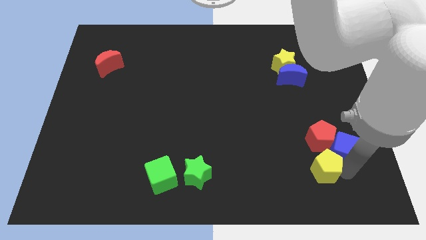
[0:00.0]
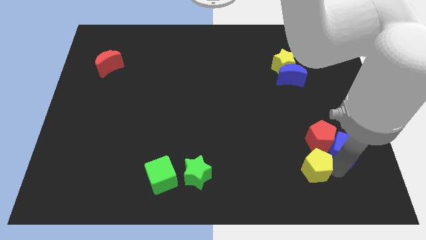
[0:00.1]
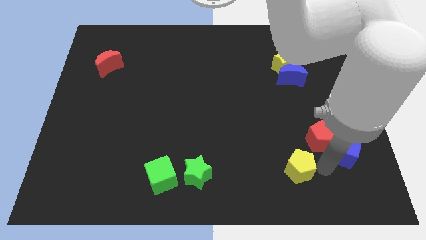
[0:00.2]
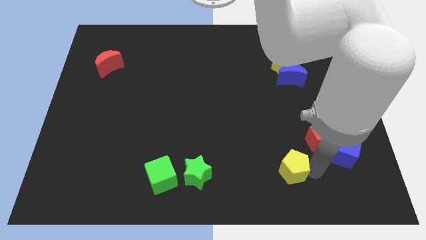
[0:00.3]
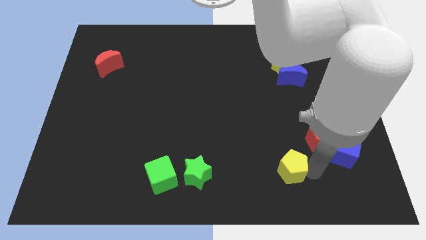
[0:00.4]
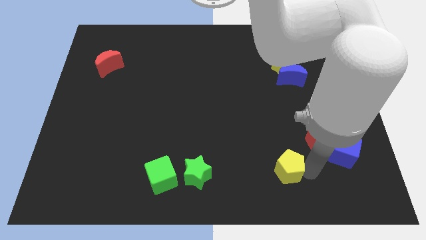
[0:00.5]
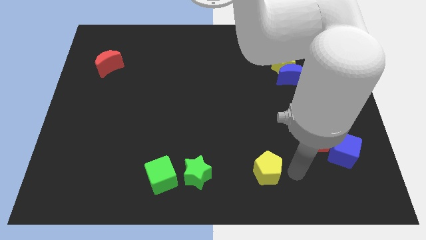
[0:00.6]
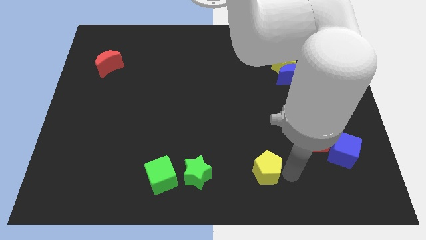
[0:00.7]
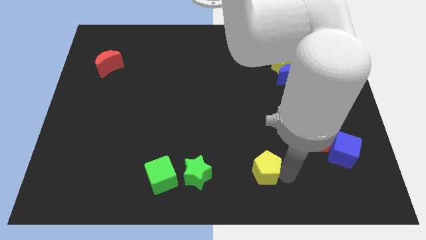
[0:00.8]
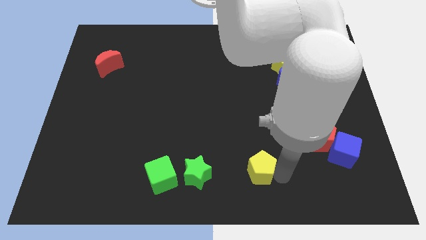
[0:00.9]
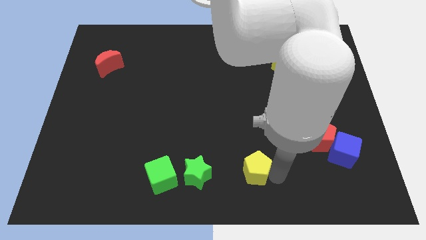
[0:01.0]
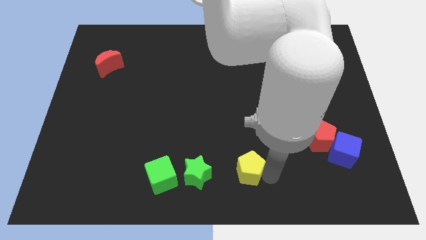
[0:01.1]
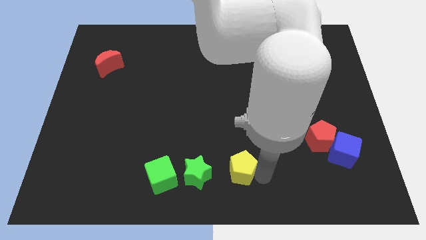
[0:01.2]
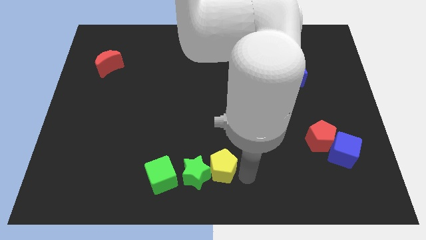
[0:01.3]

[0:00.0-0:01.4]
move the yellow pentagon into the green star

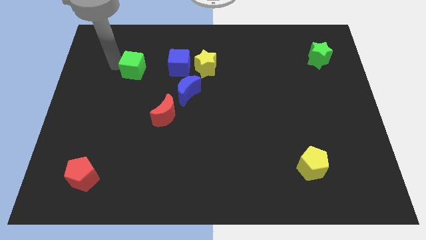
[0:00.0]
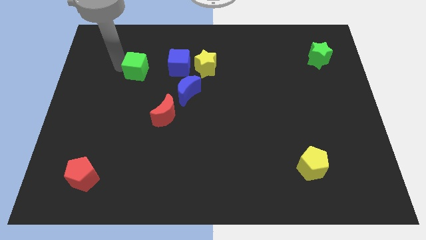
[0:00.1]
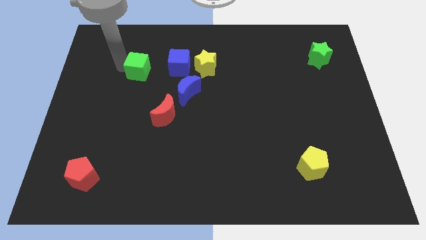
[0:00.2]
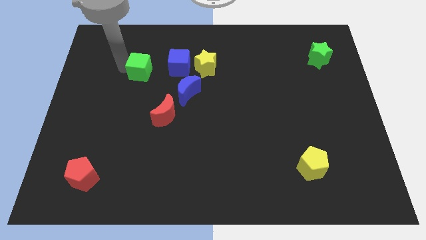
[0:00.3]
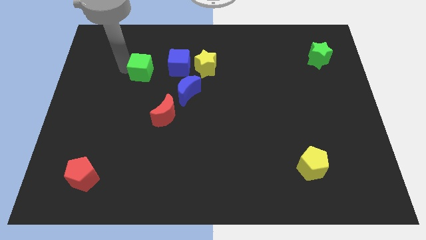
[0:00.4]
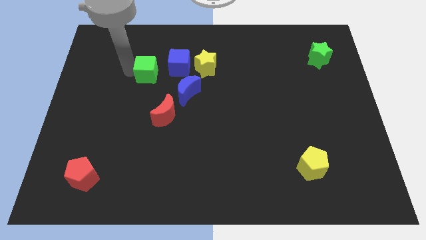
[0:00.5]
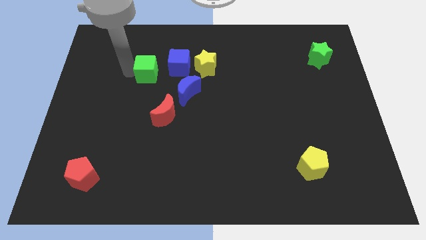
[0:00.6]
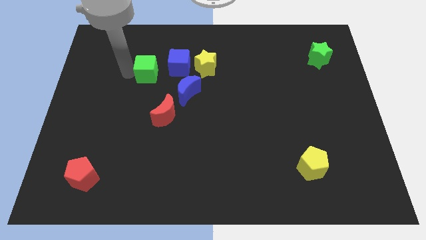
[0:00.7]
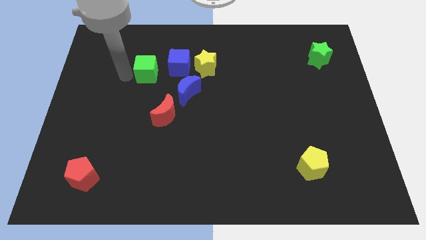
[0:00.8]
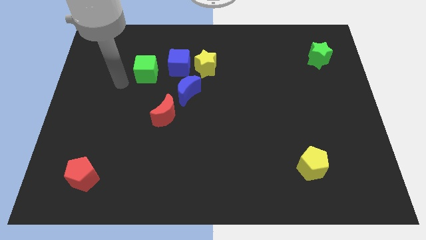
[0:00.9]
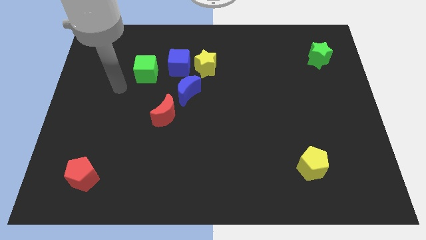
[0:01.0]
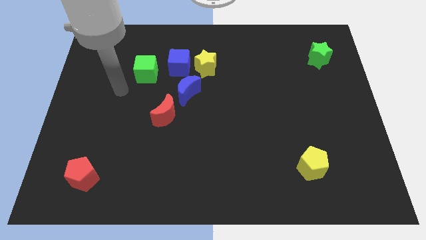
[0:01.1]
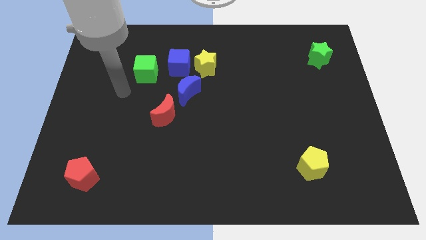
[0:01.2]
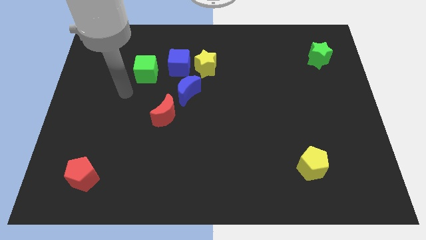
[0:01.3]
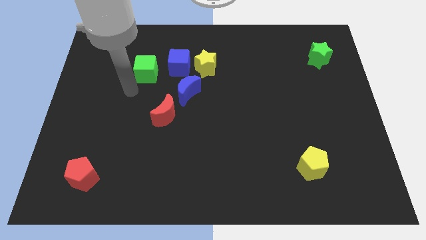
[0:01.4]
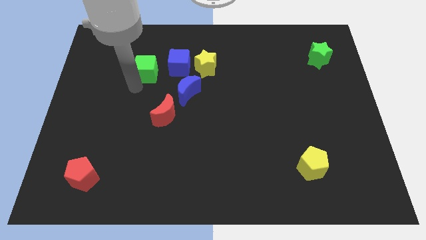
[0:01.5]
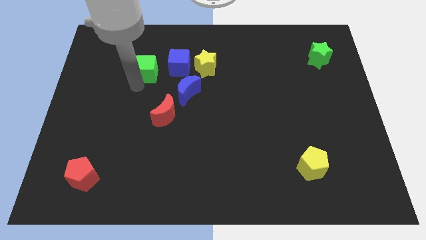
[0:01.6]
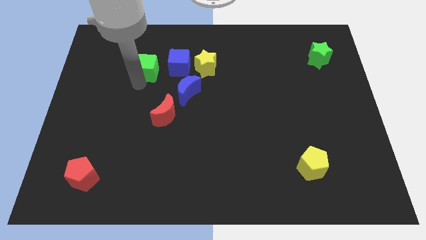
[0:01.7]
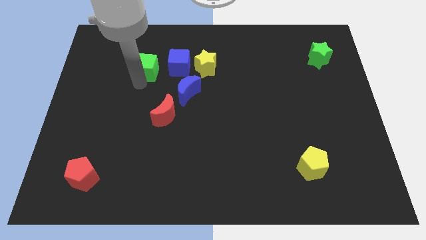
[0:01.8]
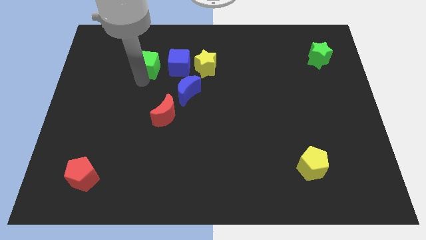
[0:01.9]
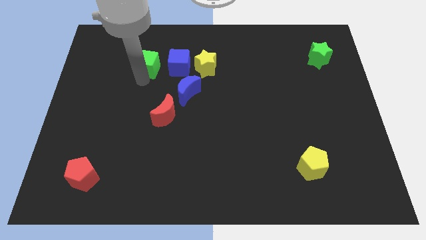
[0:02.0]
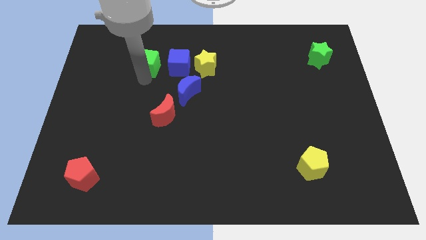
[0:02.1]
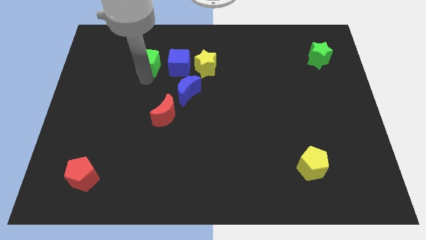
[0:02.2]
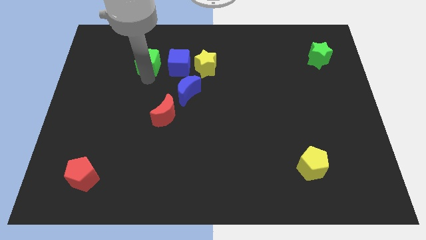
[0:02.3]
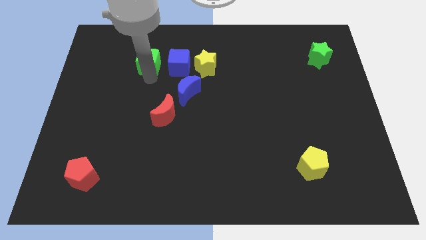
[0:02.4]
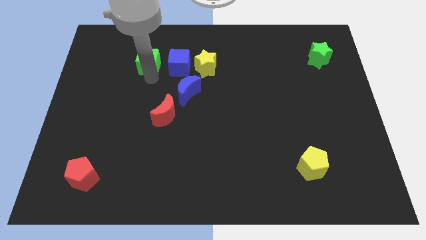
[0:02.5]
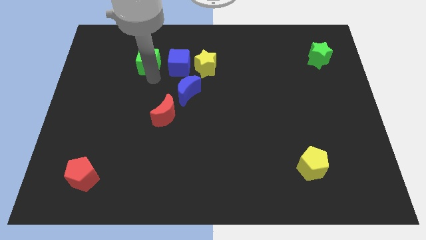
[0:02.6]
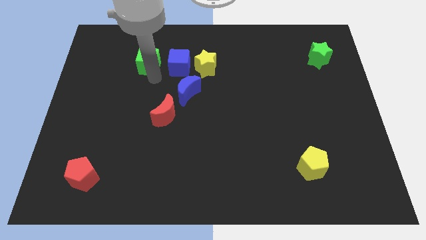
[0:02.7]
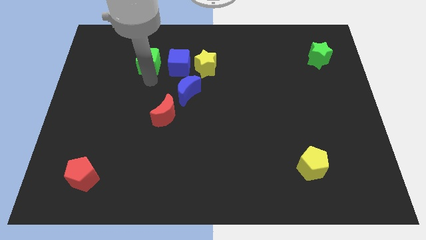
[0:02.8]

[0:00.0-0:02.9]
move the green cube diagonally top left to the red moon

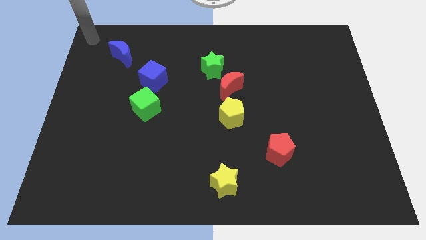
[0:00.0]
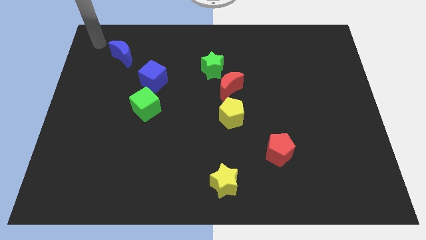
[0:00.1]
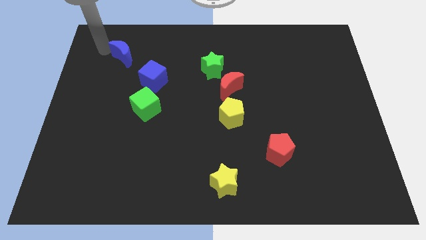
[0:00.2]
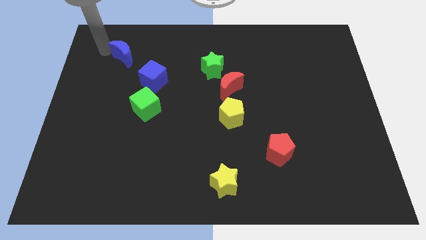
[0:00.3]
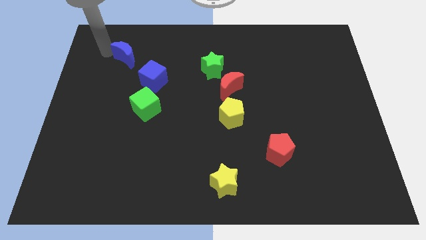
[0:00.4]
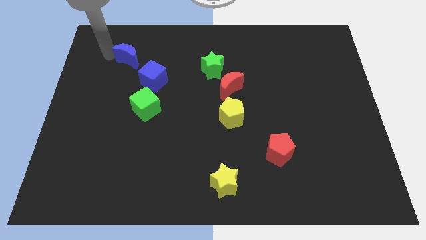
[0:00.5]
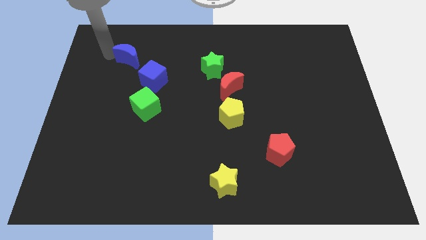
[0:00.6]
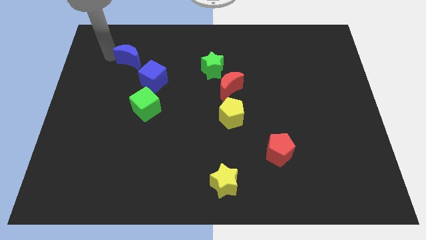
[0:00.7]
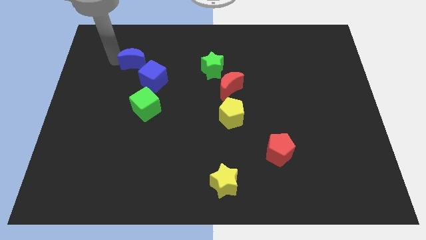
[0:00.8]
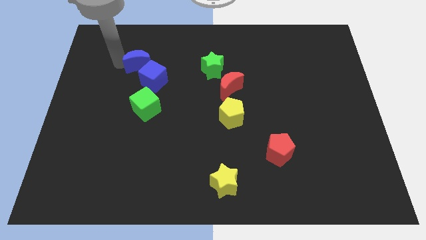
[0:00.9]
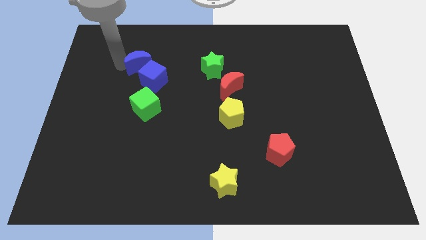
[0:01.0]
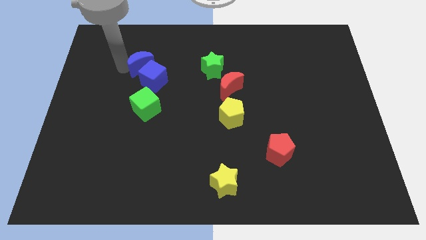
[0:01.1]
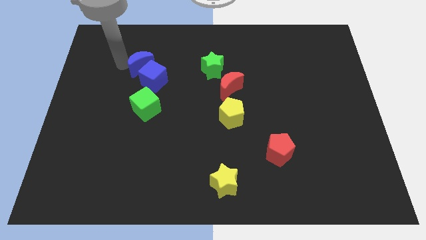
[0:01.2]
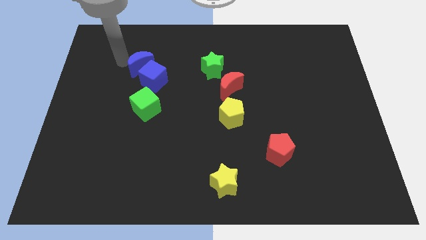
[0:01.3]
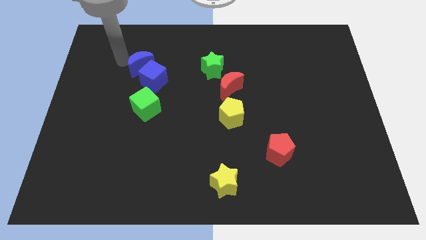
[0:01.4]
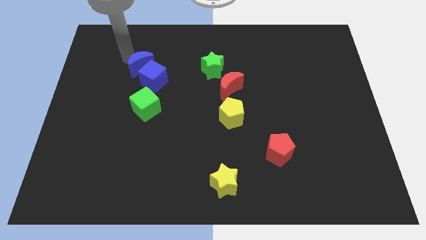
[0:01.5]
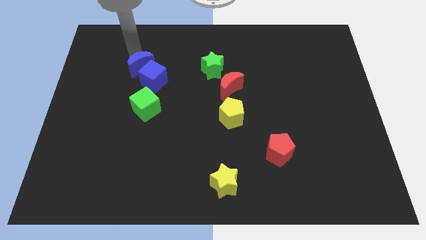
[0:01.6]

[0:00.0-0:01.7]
push the blue crescent into the blue cube

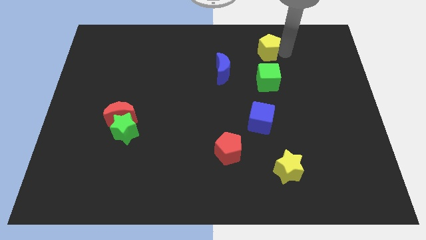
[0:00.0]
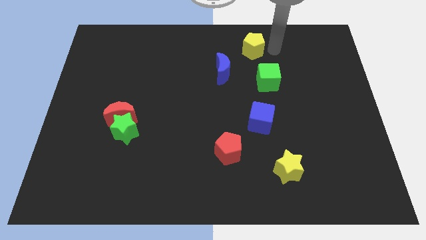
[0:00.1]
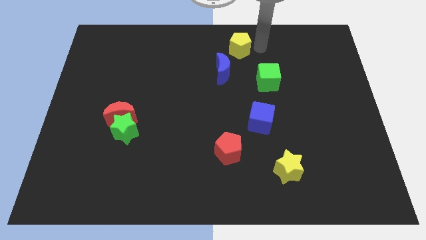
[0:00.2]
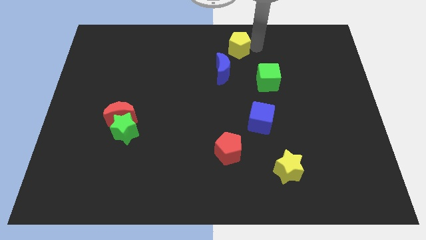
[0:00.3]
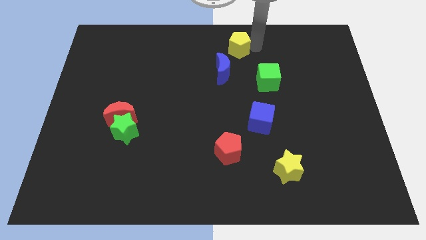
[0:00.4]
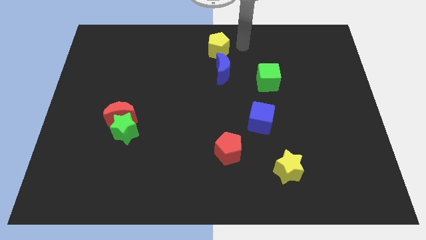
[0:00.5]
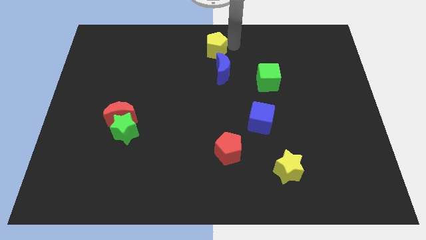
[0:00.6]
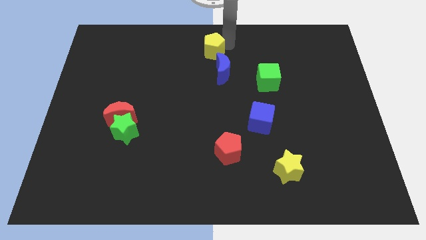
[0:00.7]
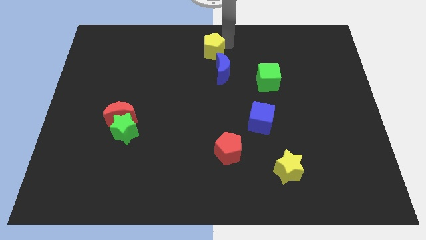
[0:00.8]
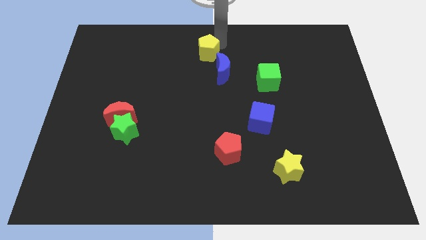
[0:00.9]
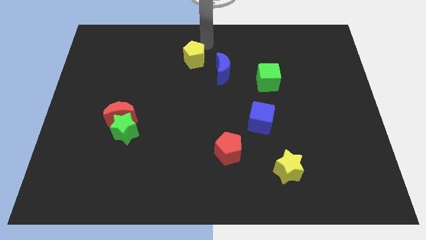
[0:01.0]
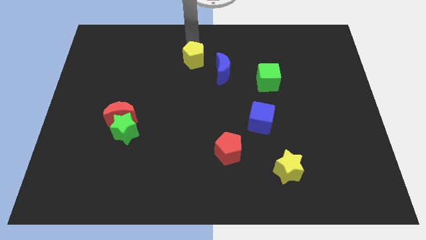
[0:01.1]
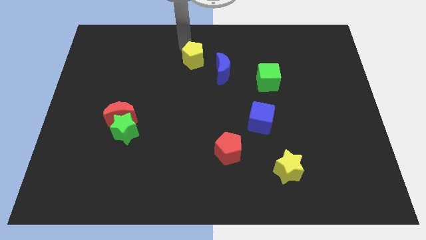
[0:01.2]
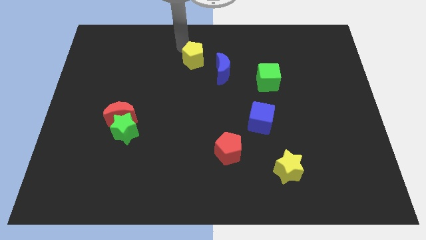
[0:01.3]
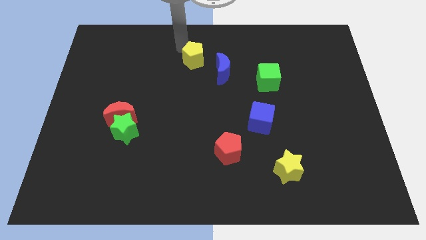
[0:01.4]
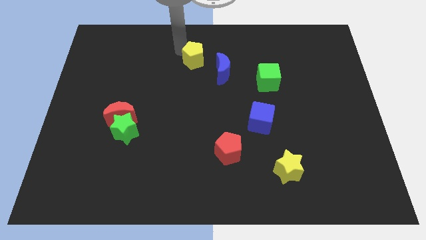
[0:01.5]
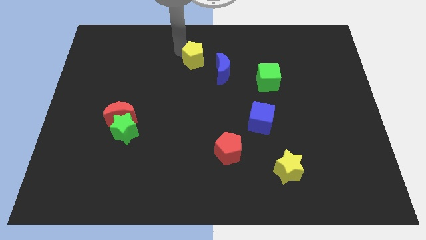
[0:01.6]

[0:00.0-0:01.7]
push the yellow pentagon diagnol to the blue crescent

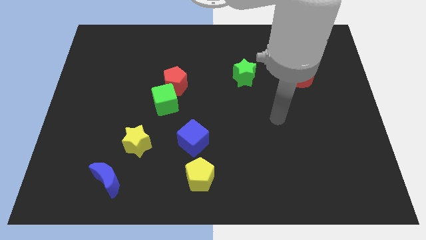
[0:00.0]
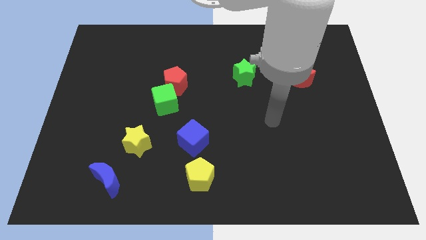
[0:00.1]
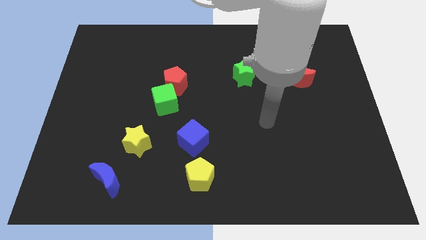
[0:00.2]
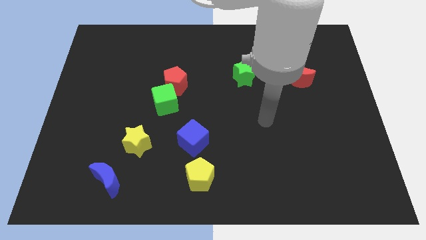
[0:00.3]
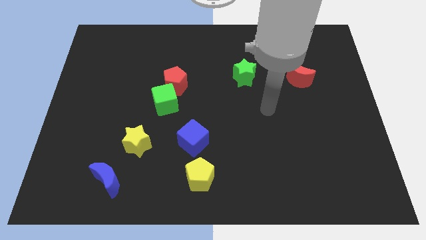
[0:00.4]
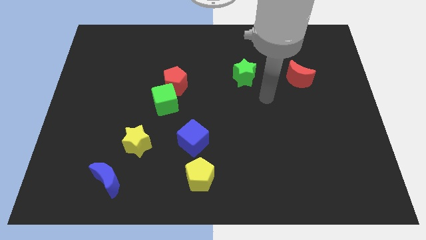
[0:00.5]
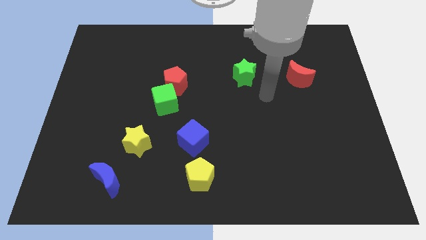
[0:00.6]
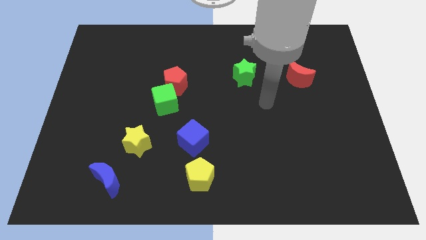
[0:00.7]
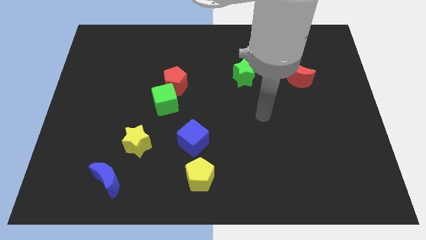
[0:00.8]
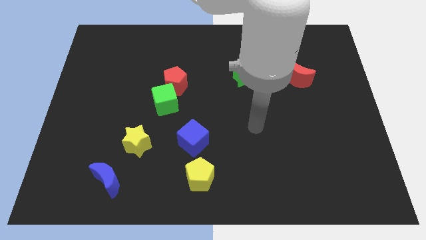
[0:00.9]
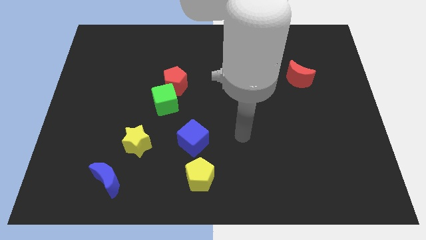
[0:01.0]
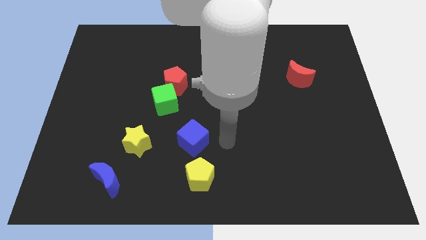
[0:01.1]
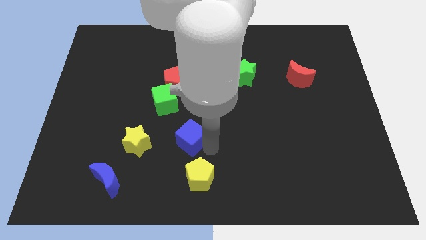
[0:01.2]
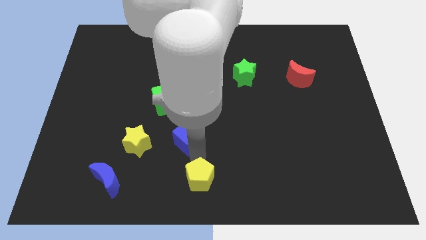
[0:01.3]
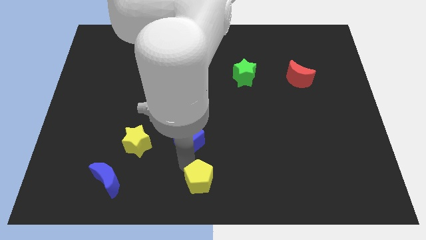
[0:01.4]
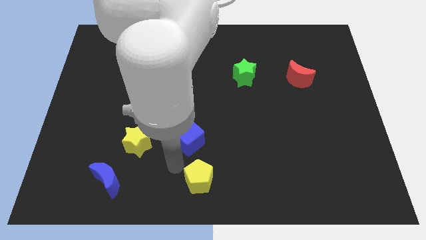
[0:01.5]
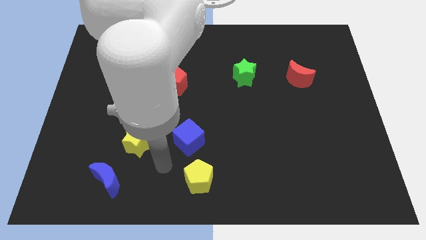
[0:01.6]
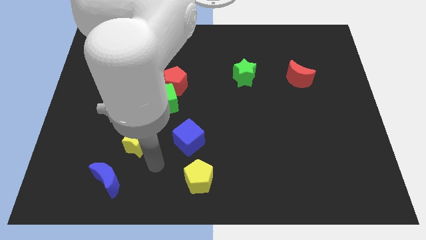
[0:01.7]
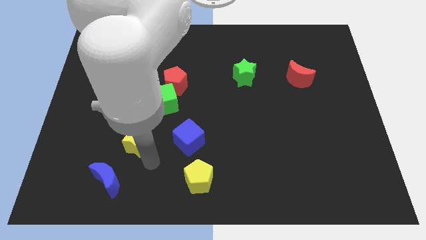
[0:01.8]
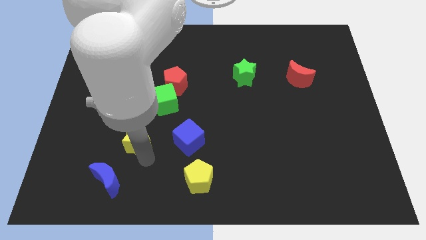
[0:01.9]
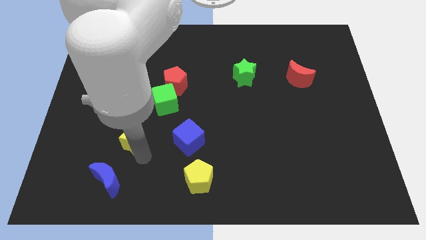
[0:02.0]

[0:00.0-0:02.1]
move the yellow star slightly up
